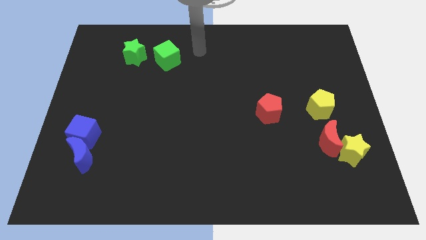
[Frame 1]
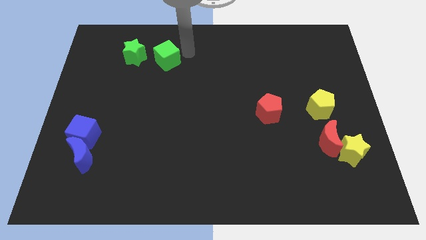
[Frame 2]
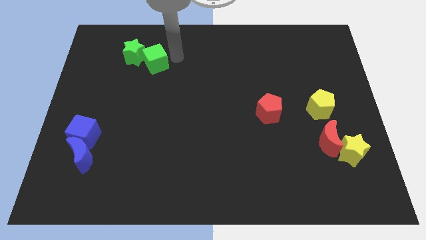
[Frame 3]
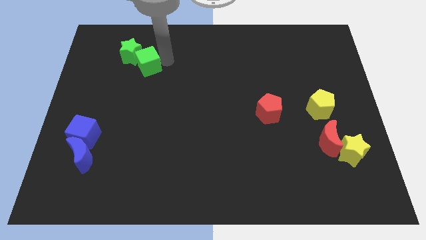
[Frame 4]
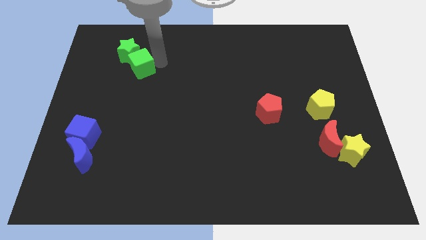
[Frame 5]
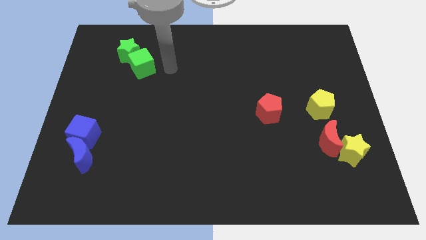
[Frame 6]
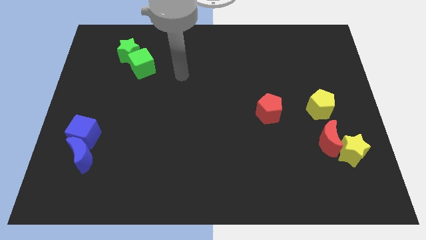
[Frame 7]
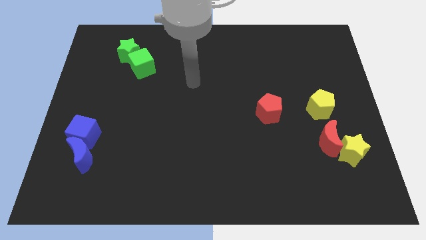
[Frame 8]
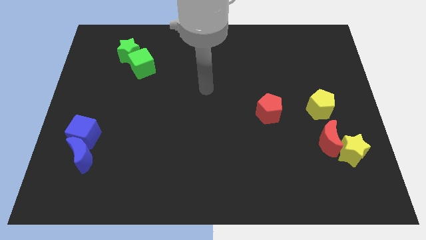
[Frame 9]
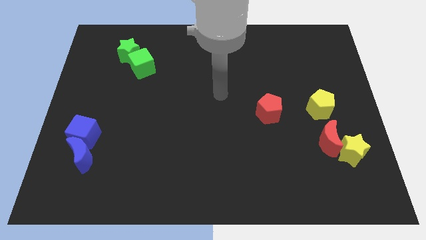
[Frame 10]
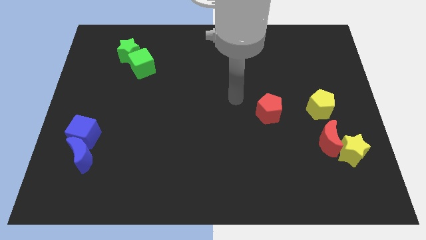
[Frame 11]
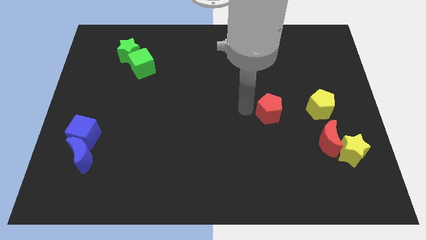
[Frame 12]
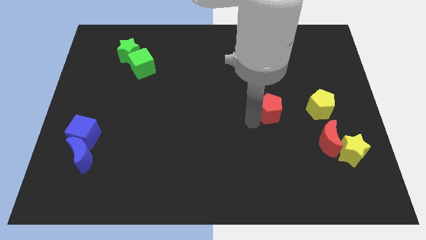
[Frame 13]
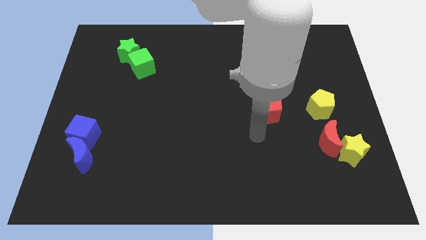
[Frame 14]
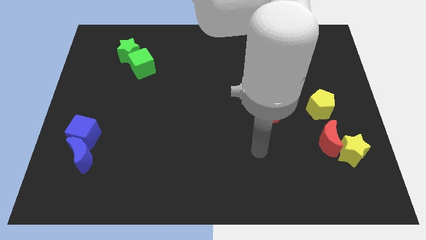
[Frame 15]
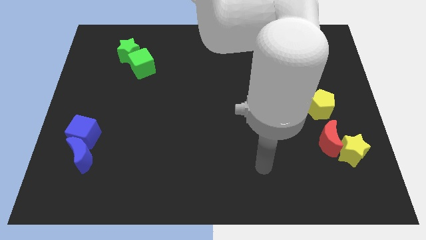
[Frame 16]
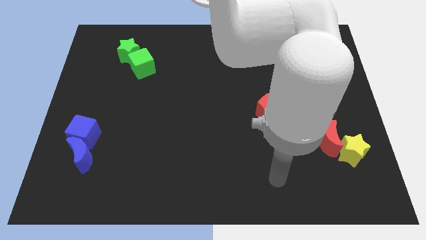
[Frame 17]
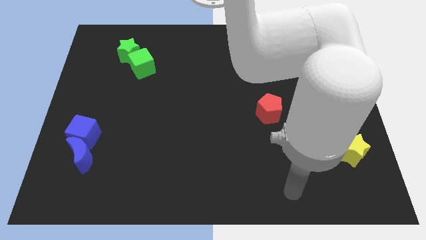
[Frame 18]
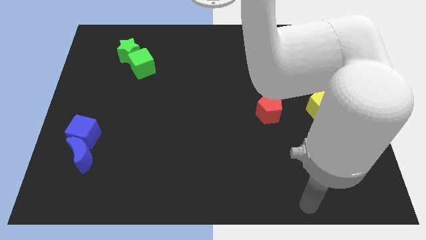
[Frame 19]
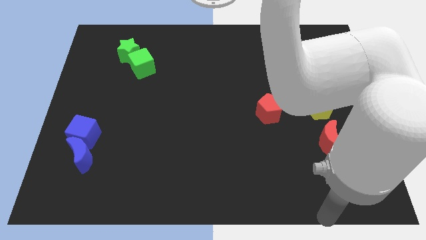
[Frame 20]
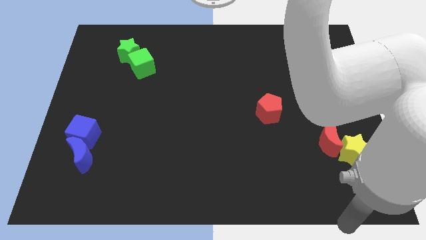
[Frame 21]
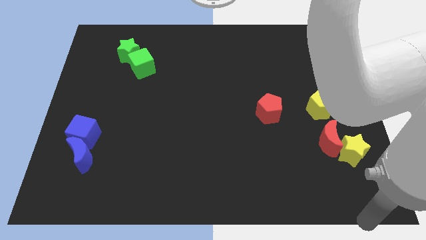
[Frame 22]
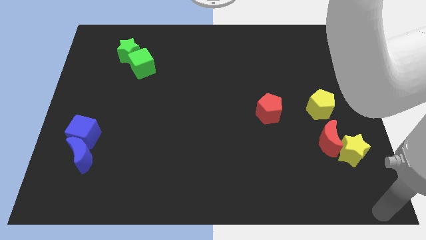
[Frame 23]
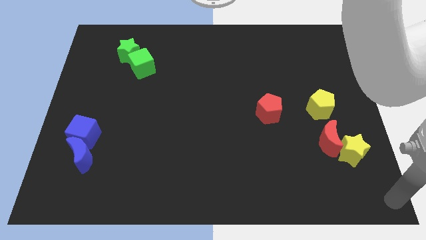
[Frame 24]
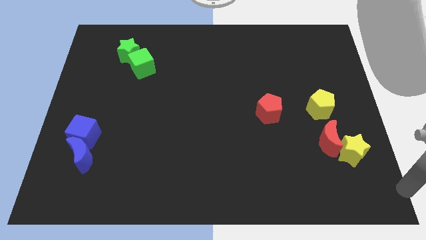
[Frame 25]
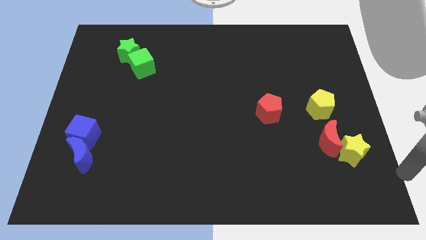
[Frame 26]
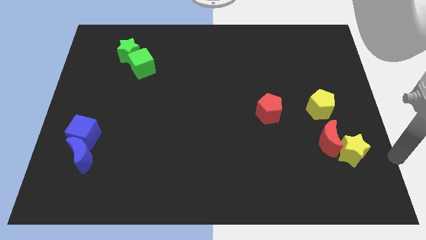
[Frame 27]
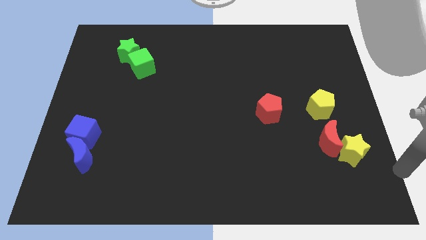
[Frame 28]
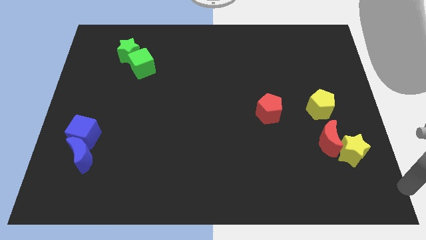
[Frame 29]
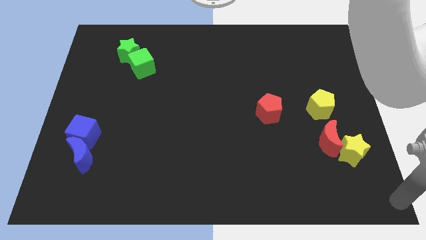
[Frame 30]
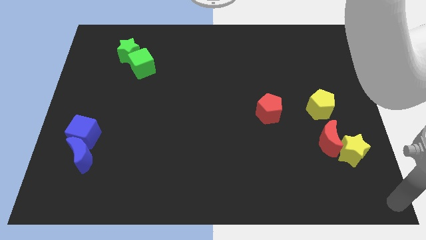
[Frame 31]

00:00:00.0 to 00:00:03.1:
slide the green cube into the green star

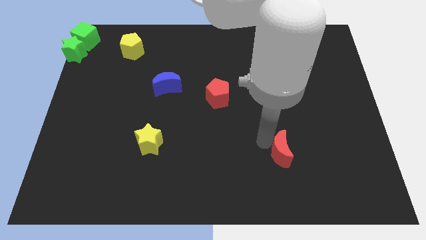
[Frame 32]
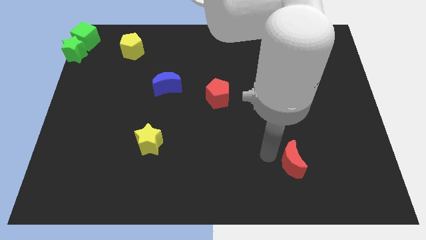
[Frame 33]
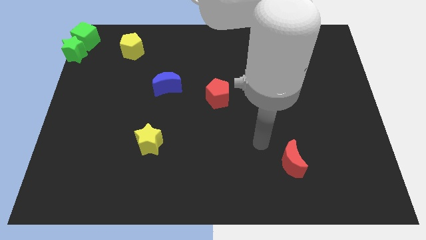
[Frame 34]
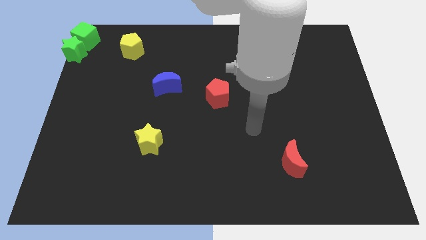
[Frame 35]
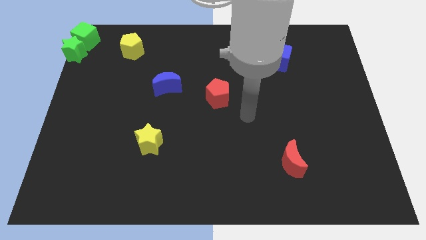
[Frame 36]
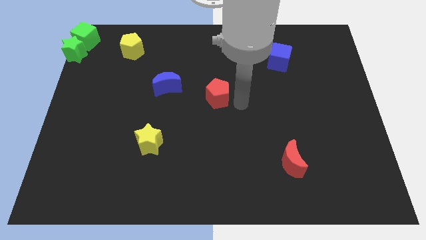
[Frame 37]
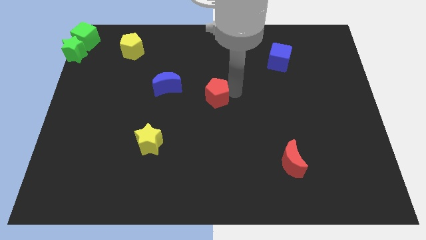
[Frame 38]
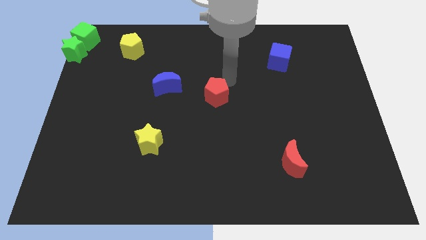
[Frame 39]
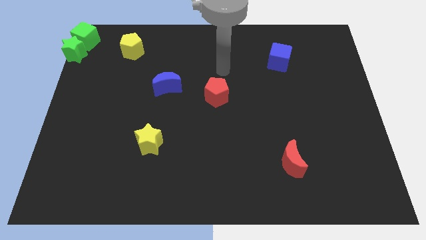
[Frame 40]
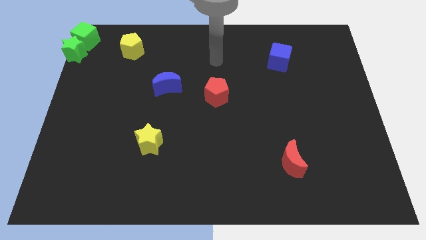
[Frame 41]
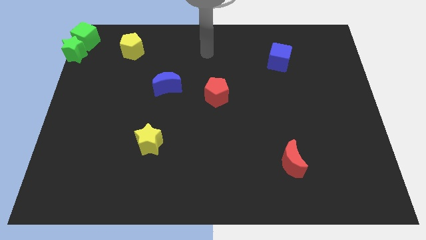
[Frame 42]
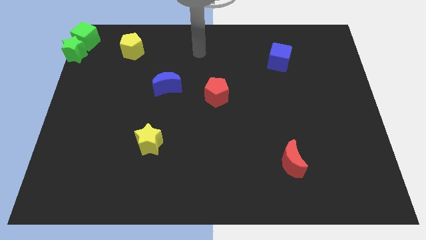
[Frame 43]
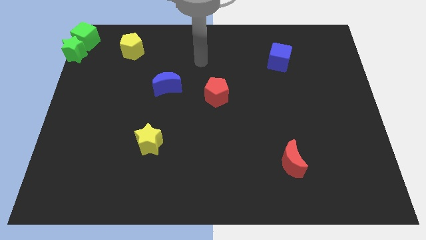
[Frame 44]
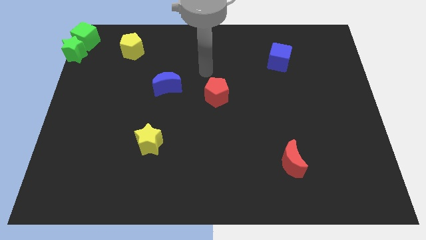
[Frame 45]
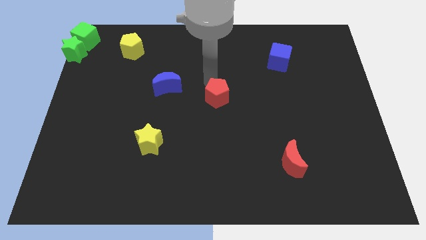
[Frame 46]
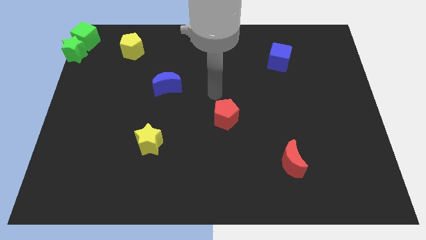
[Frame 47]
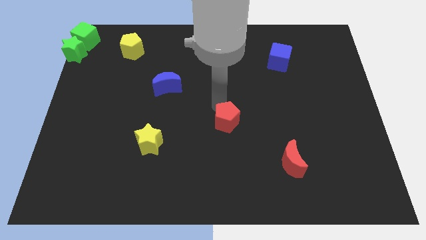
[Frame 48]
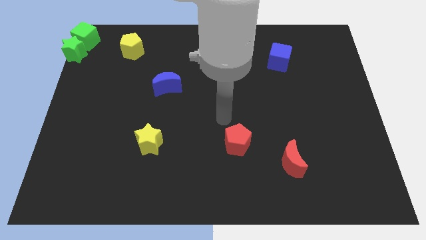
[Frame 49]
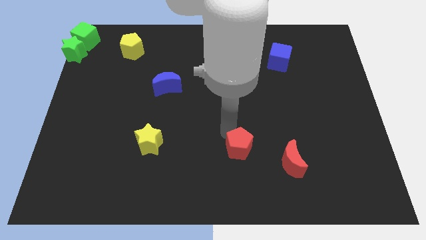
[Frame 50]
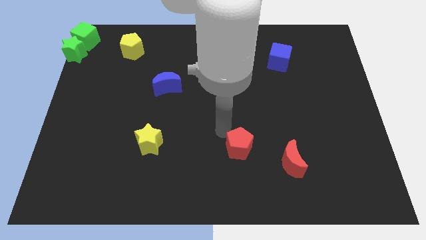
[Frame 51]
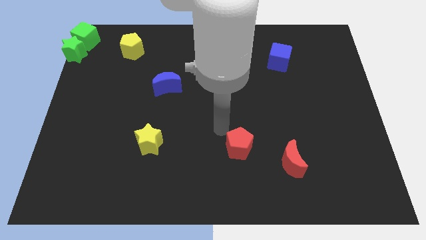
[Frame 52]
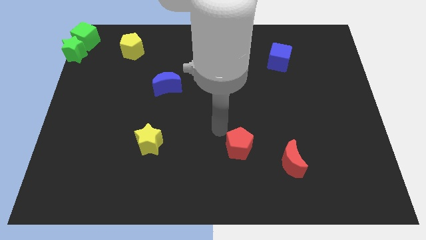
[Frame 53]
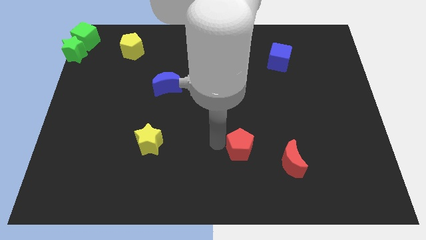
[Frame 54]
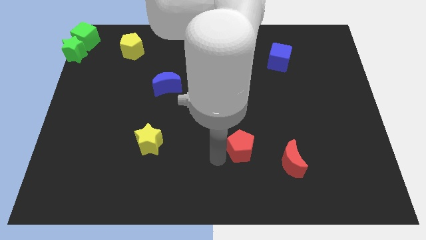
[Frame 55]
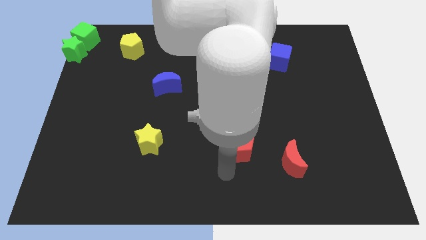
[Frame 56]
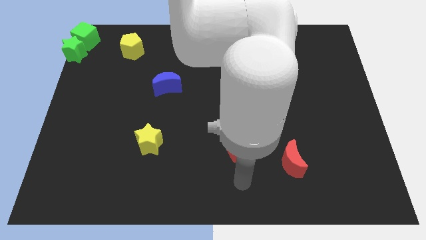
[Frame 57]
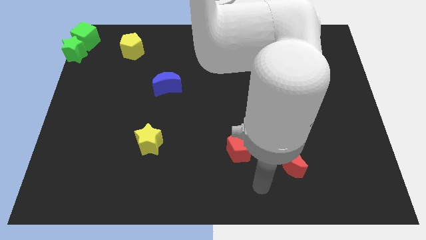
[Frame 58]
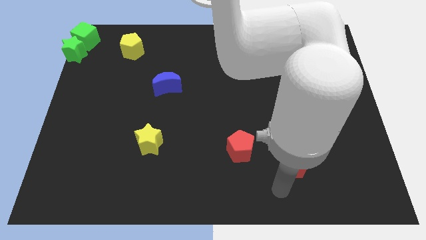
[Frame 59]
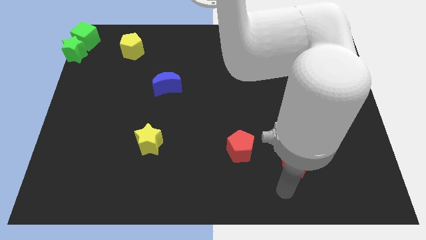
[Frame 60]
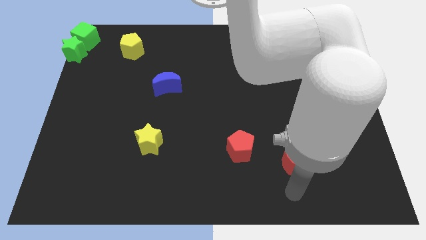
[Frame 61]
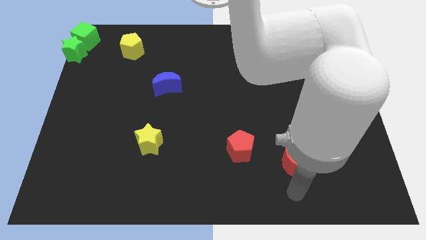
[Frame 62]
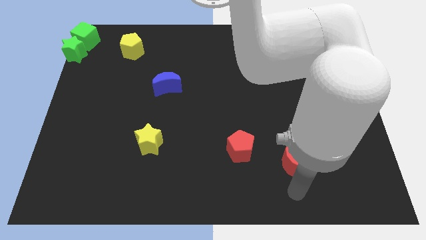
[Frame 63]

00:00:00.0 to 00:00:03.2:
place the red pentagon diagonally to the red moon

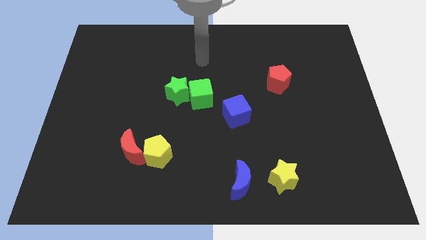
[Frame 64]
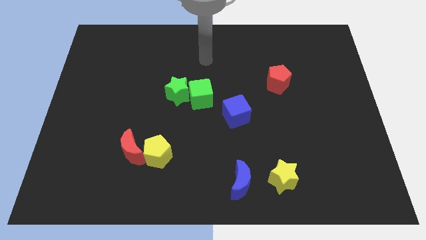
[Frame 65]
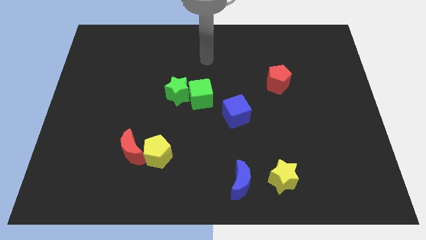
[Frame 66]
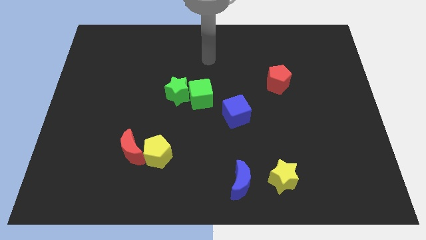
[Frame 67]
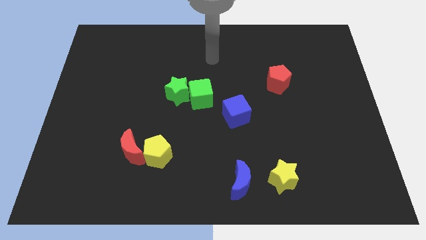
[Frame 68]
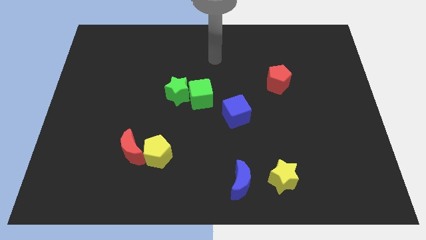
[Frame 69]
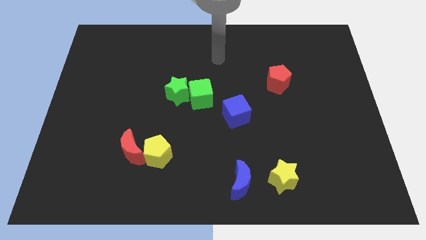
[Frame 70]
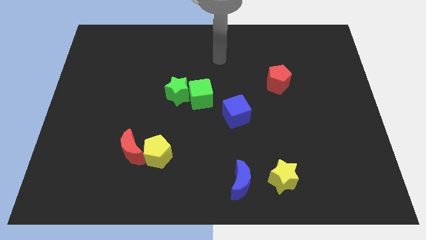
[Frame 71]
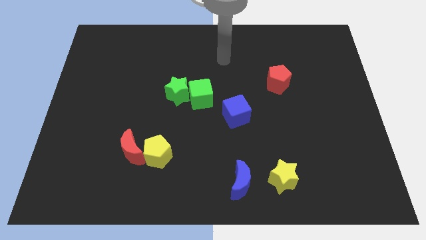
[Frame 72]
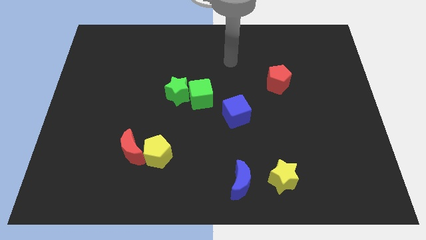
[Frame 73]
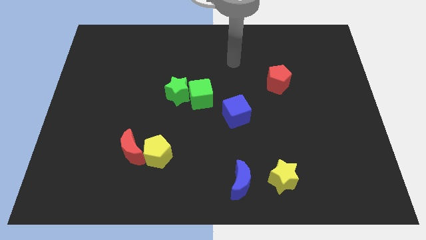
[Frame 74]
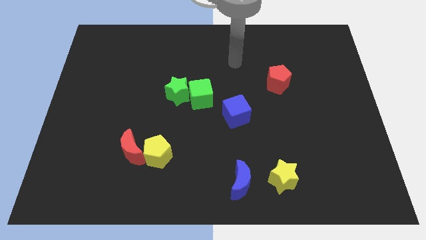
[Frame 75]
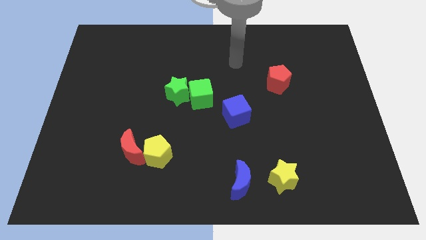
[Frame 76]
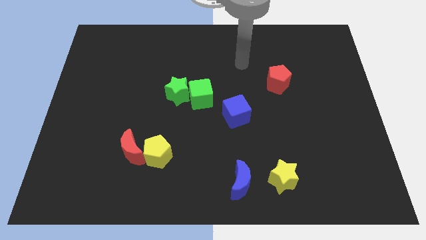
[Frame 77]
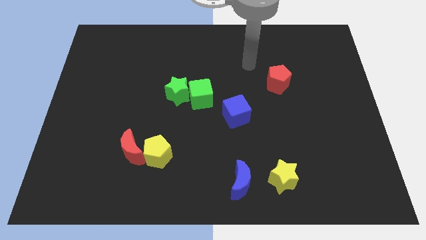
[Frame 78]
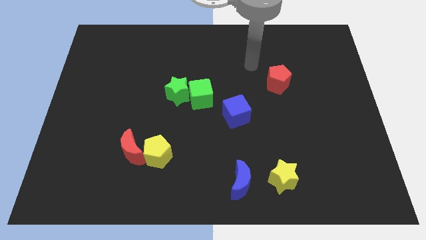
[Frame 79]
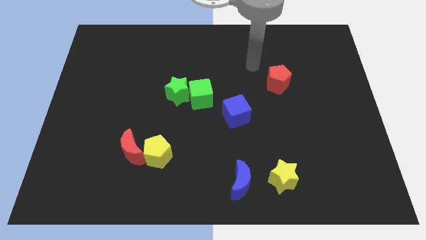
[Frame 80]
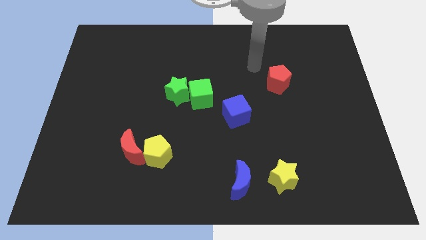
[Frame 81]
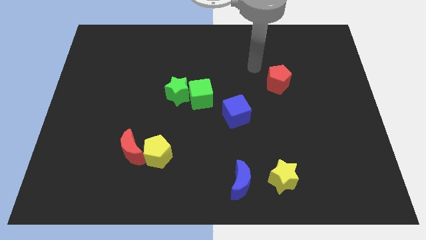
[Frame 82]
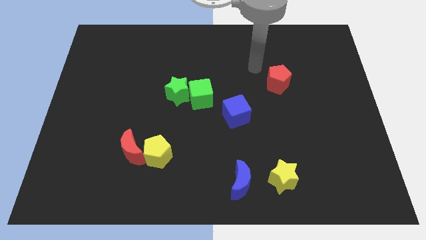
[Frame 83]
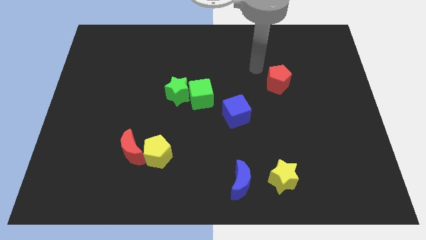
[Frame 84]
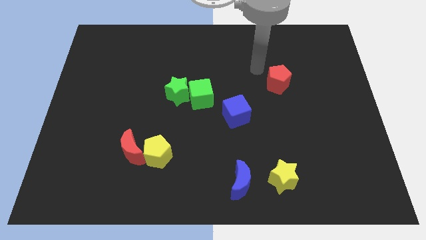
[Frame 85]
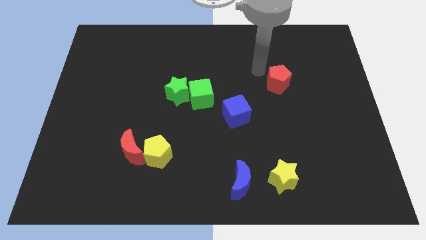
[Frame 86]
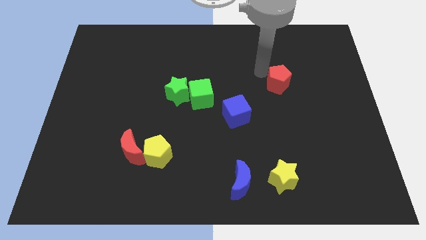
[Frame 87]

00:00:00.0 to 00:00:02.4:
place your arm to the left of red pentagon

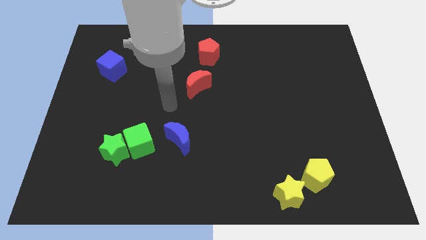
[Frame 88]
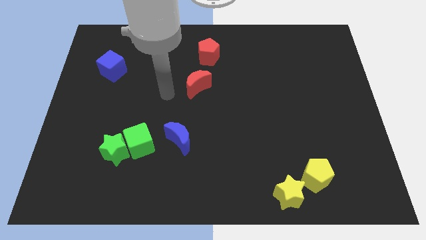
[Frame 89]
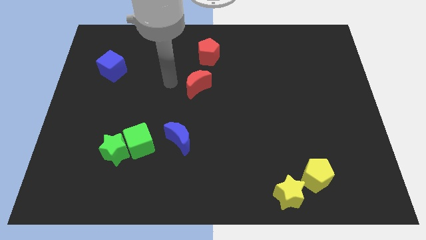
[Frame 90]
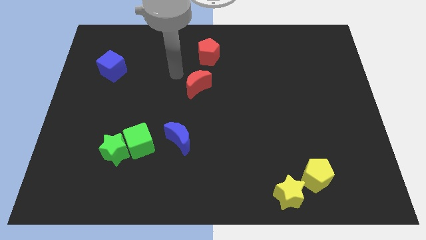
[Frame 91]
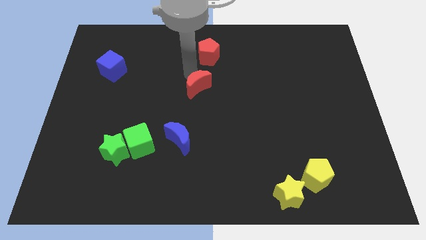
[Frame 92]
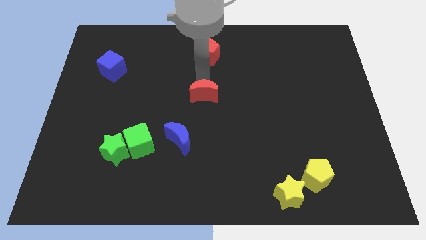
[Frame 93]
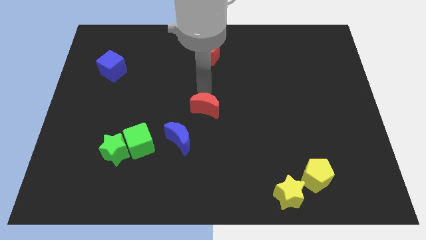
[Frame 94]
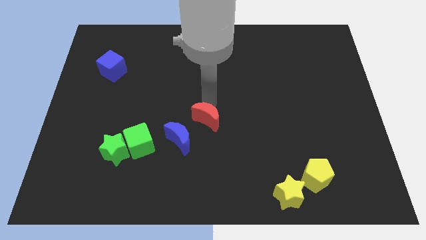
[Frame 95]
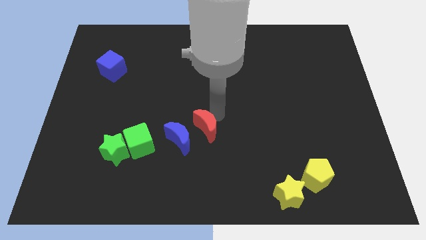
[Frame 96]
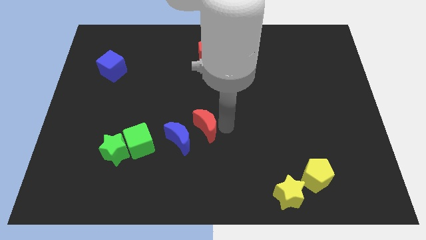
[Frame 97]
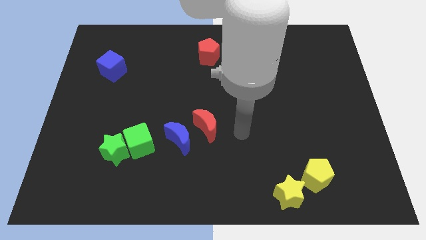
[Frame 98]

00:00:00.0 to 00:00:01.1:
place red moon to the right of blue moon
